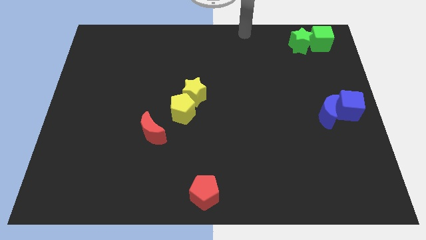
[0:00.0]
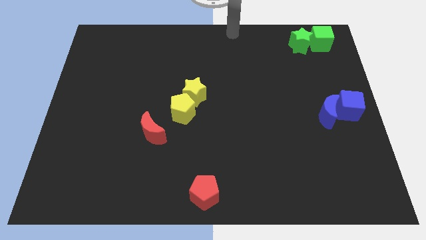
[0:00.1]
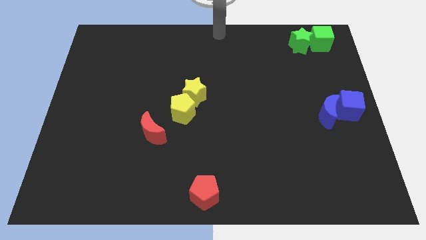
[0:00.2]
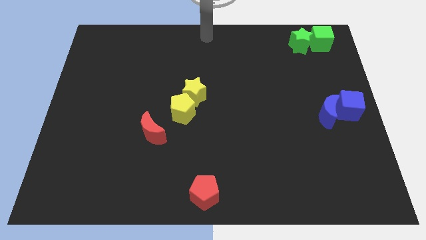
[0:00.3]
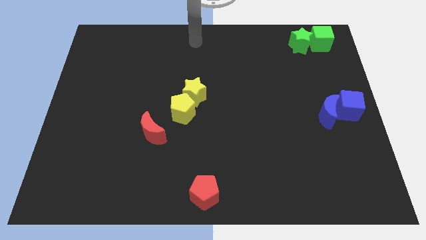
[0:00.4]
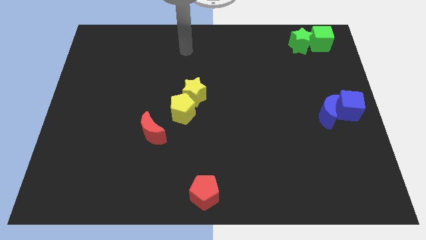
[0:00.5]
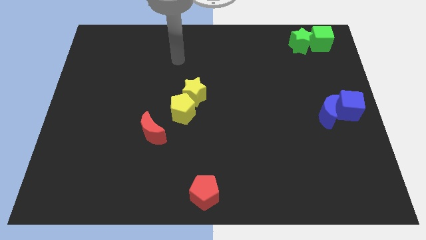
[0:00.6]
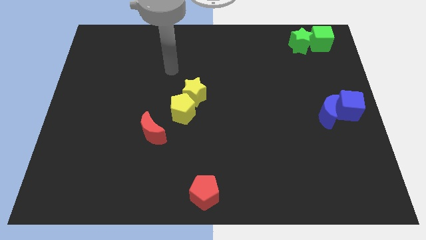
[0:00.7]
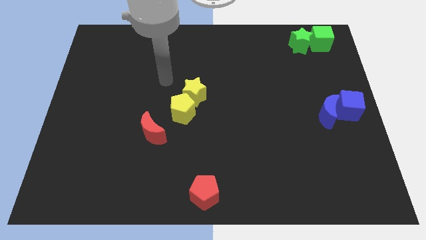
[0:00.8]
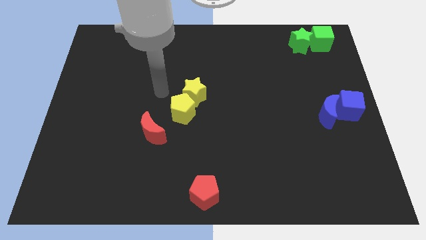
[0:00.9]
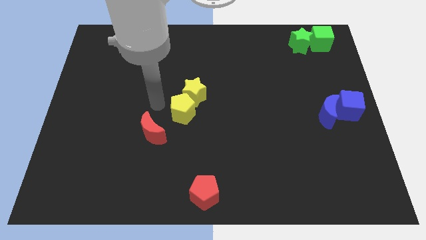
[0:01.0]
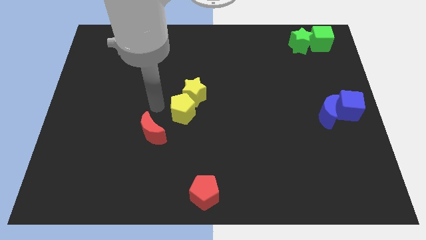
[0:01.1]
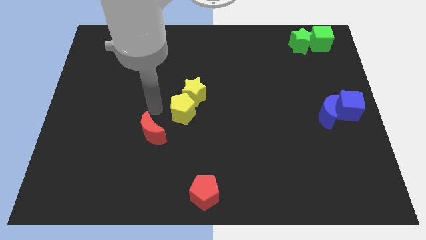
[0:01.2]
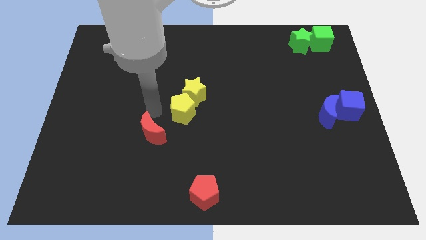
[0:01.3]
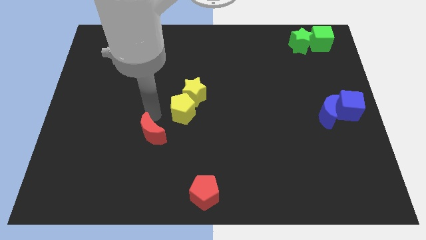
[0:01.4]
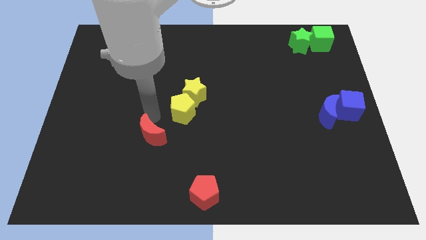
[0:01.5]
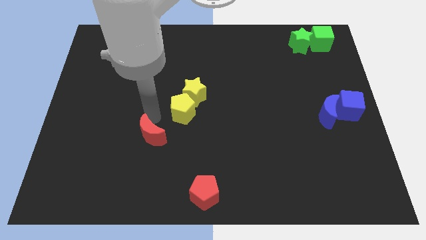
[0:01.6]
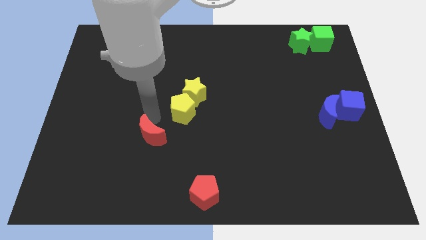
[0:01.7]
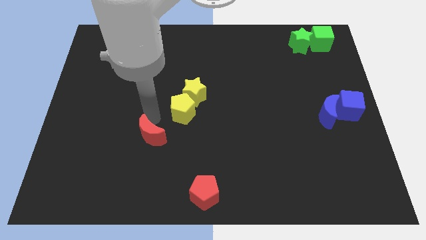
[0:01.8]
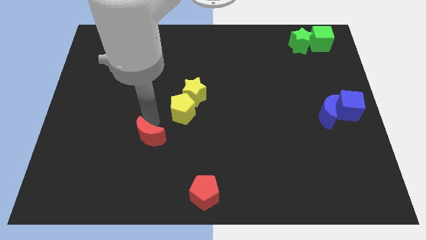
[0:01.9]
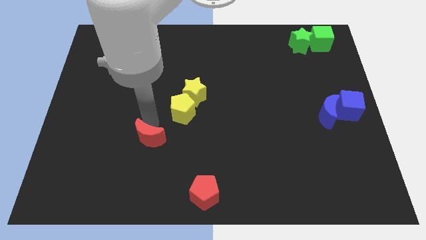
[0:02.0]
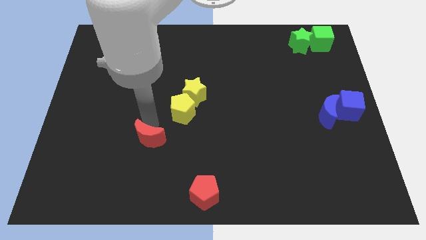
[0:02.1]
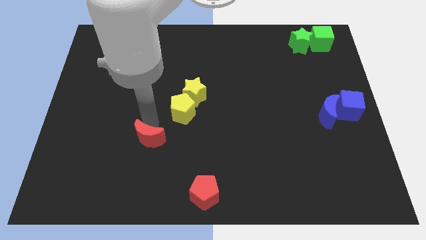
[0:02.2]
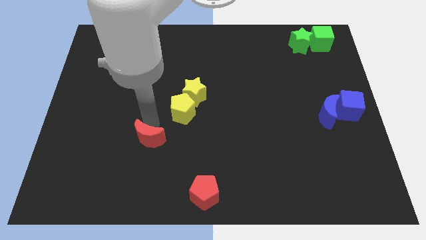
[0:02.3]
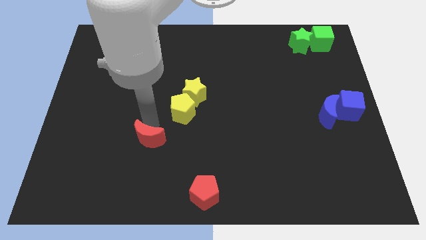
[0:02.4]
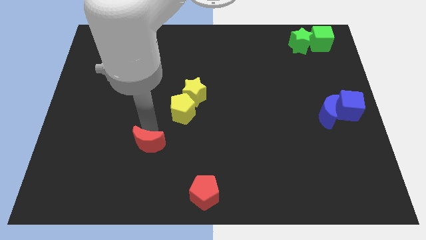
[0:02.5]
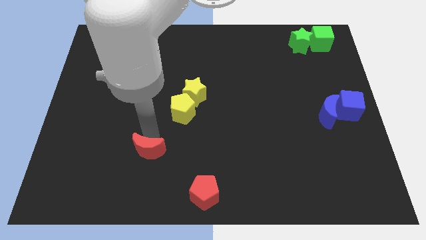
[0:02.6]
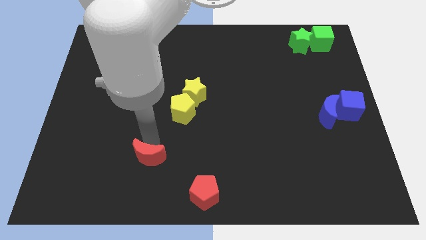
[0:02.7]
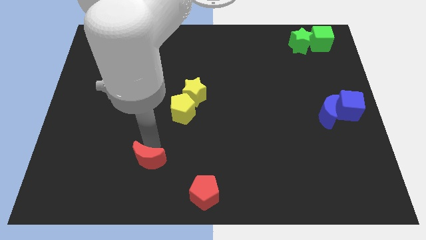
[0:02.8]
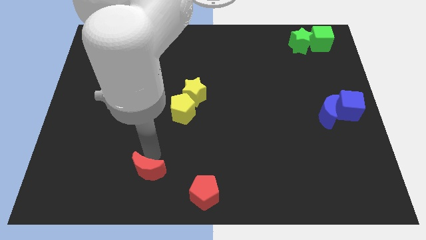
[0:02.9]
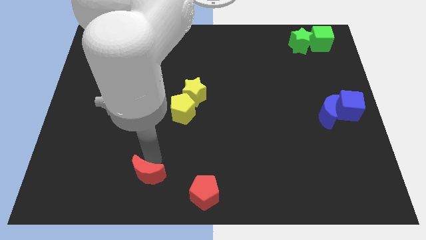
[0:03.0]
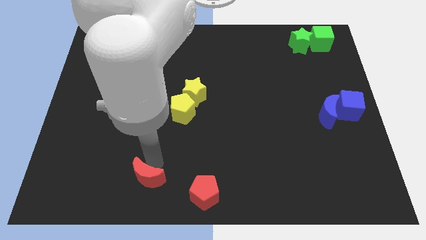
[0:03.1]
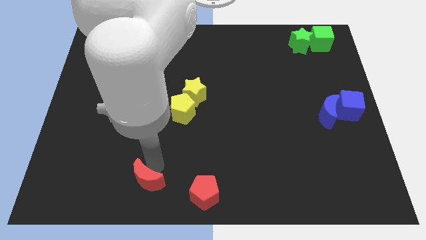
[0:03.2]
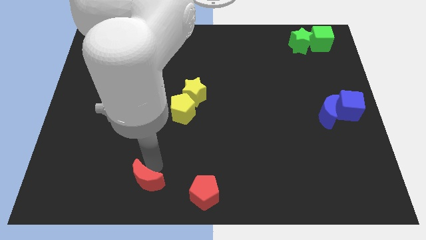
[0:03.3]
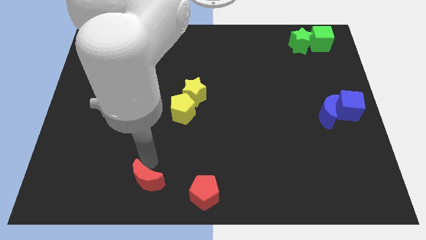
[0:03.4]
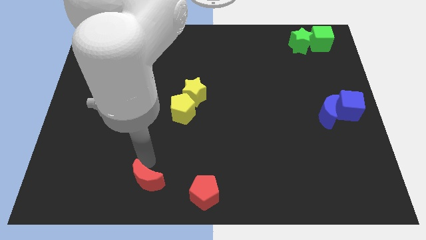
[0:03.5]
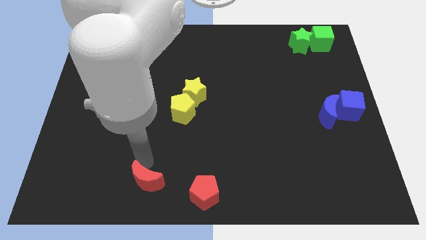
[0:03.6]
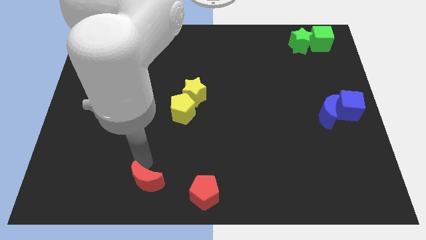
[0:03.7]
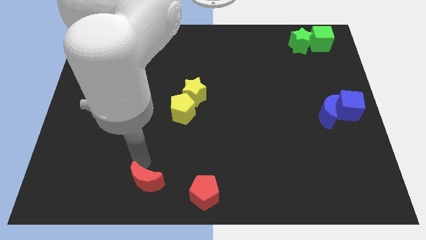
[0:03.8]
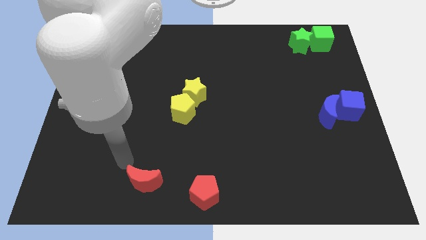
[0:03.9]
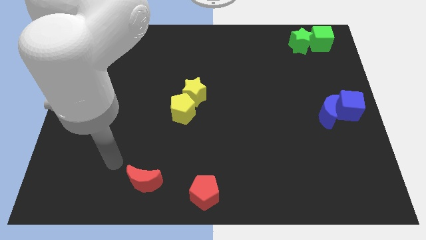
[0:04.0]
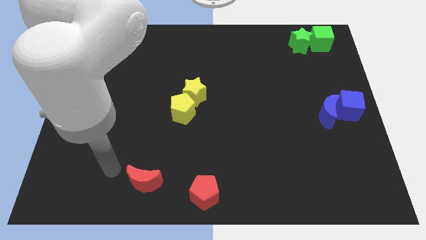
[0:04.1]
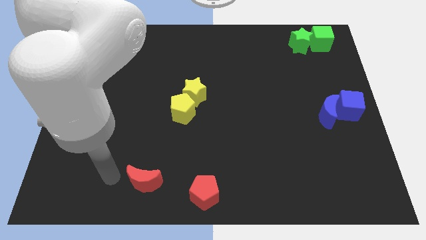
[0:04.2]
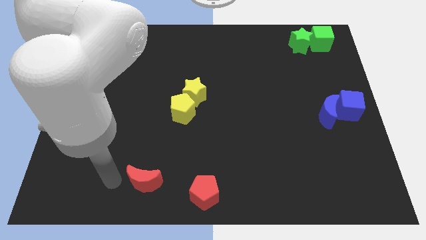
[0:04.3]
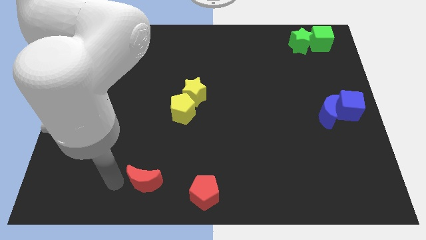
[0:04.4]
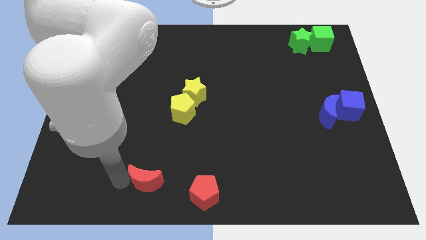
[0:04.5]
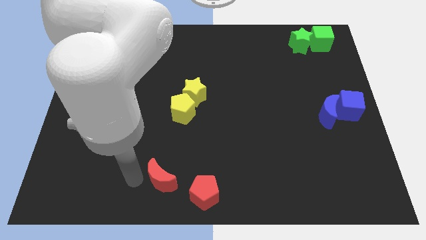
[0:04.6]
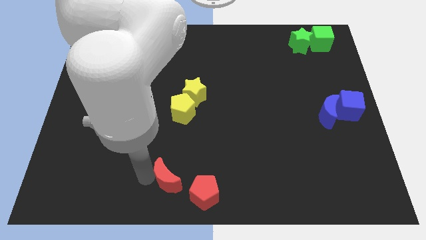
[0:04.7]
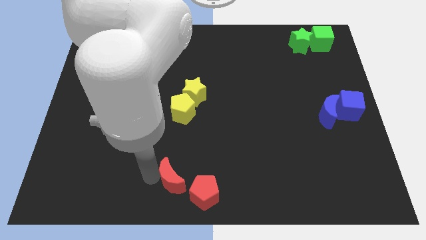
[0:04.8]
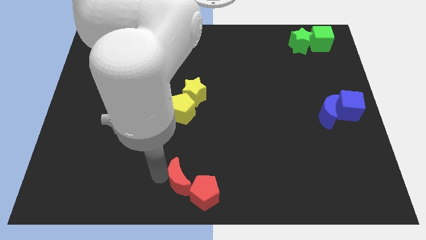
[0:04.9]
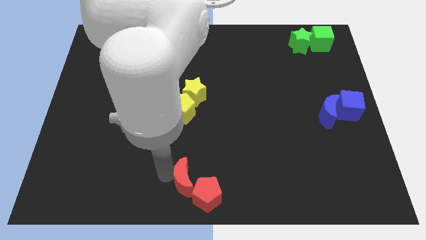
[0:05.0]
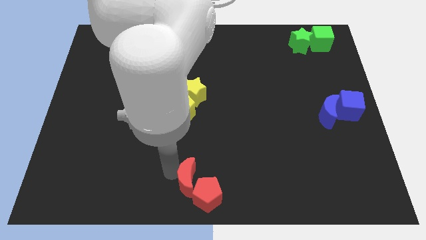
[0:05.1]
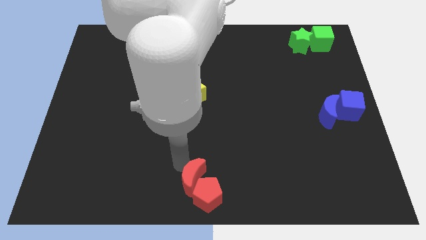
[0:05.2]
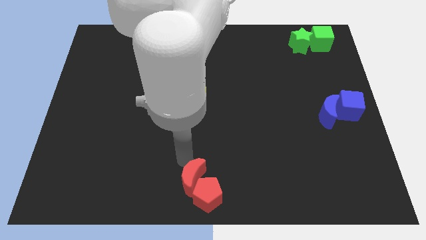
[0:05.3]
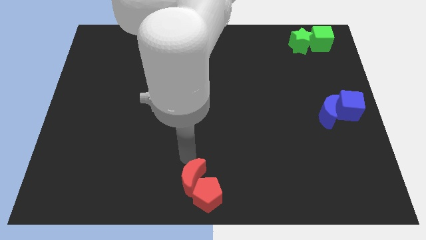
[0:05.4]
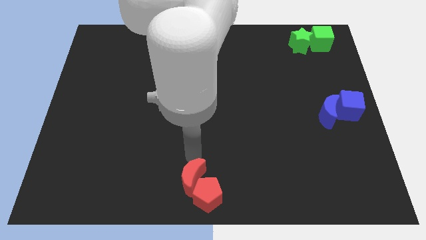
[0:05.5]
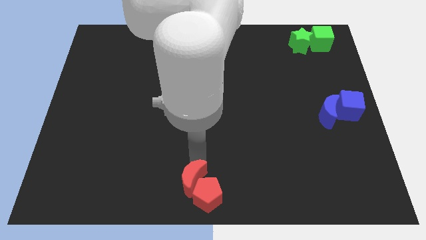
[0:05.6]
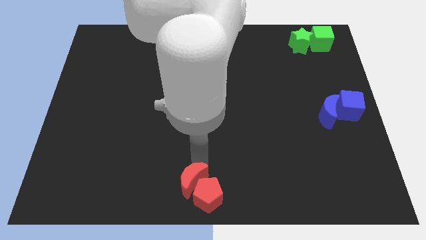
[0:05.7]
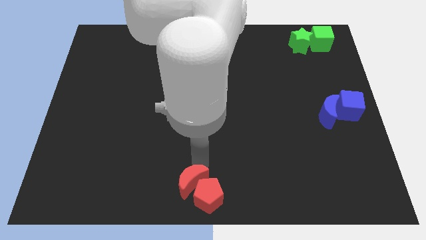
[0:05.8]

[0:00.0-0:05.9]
move the red crescent to the left of the red pentagon

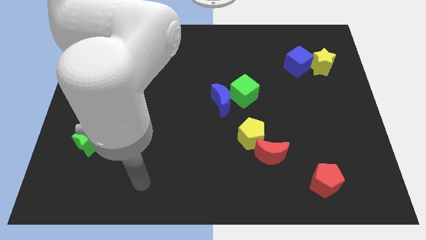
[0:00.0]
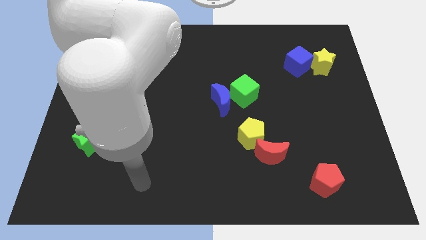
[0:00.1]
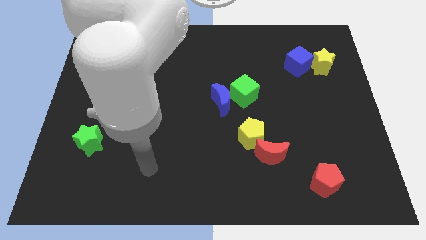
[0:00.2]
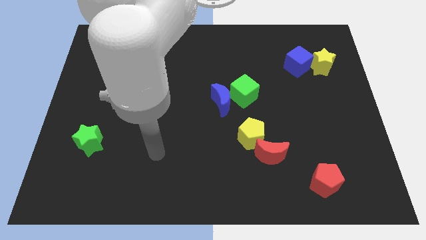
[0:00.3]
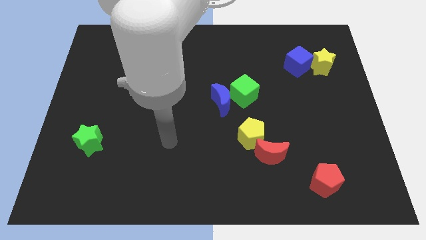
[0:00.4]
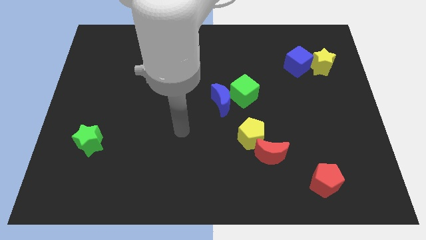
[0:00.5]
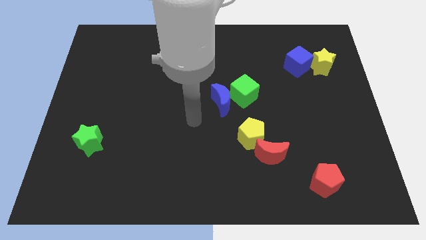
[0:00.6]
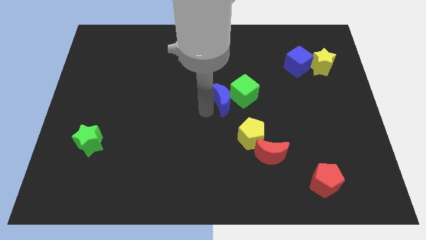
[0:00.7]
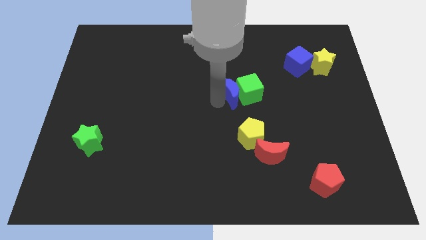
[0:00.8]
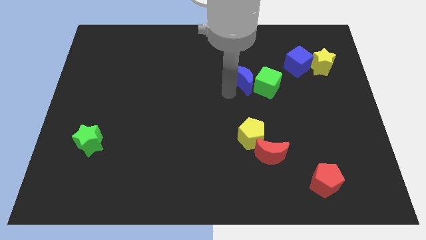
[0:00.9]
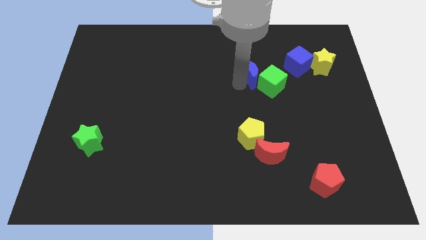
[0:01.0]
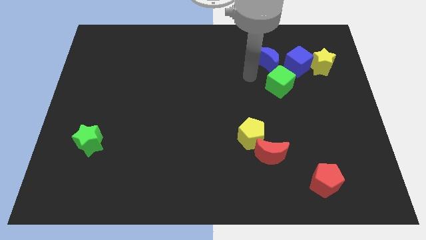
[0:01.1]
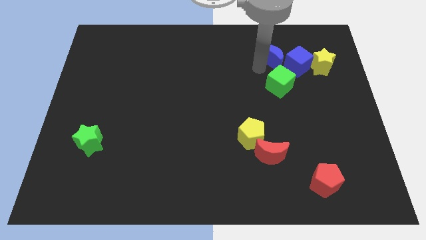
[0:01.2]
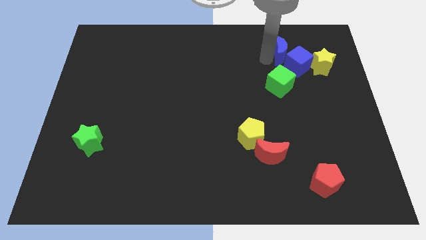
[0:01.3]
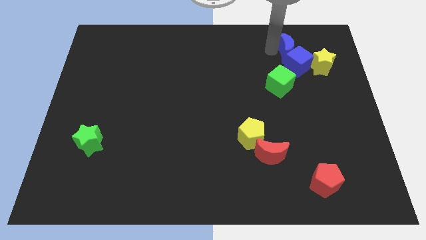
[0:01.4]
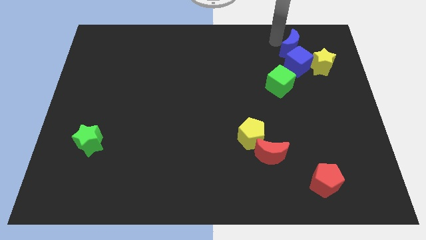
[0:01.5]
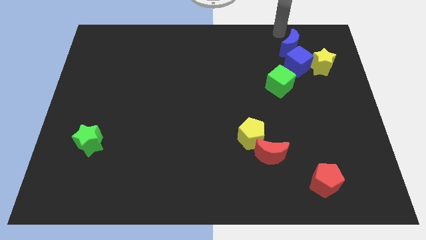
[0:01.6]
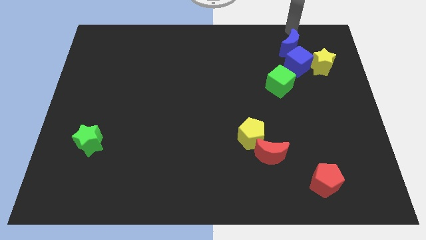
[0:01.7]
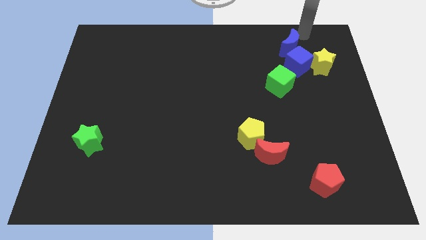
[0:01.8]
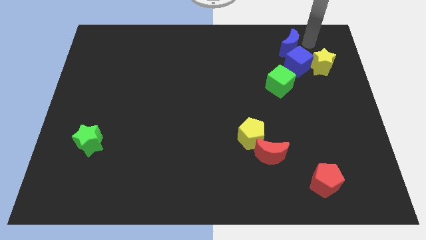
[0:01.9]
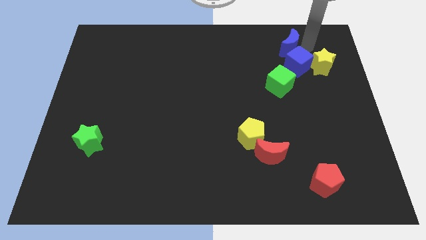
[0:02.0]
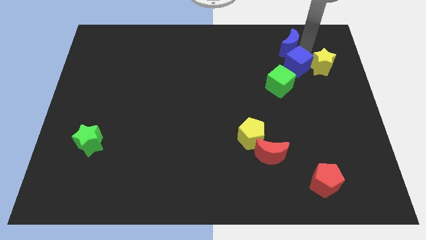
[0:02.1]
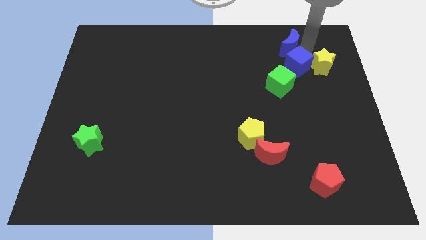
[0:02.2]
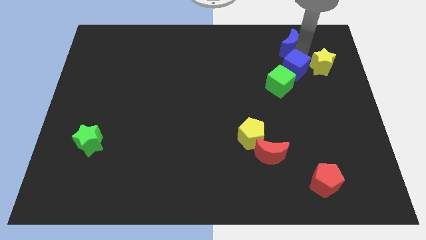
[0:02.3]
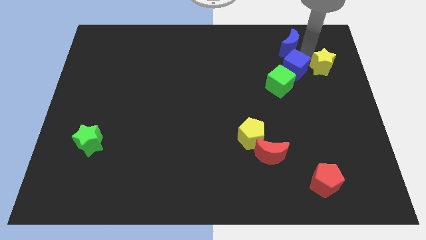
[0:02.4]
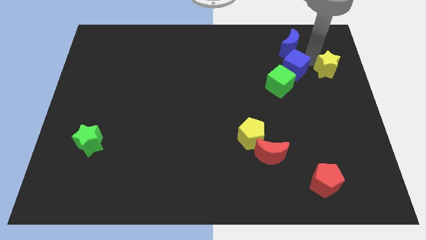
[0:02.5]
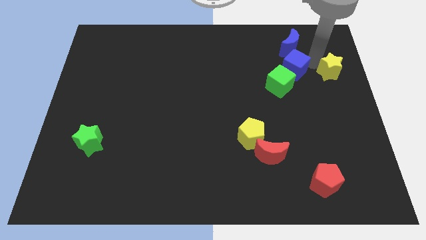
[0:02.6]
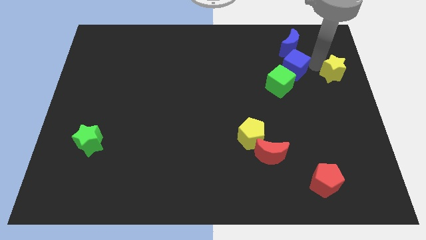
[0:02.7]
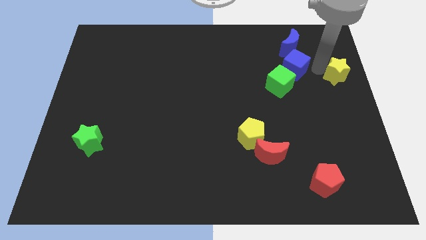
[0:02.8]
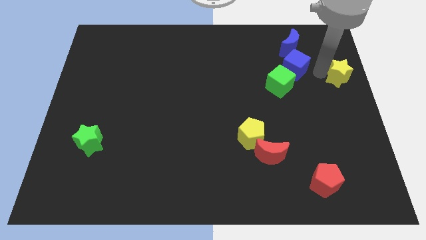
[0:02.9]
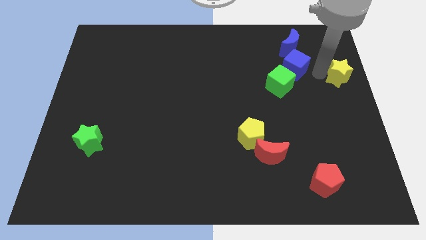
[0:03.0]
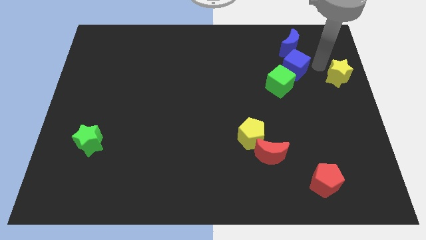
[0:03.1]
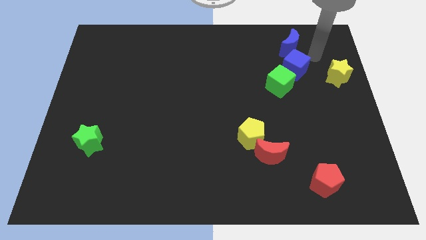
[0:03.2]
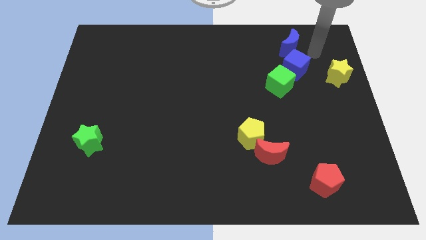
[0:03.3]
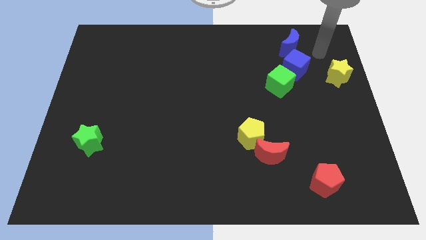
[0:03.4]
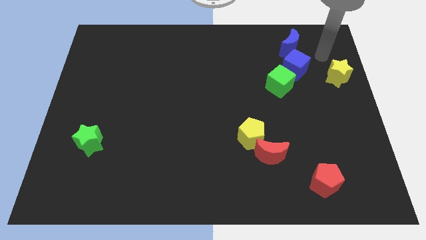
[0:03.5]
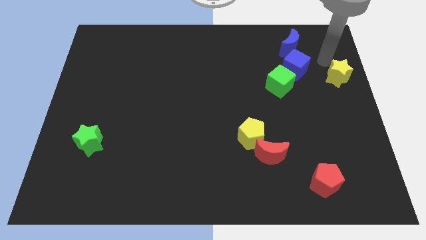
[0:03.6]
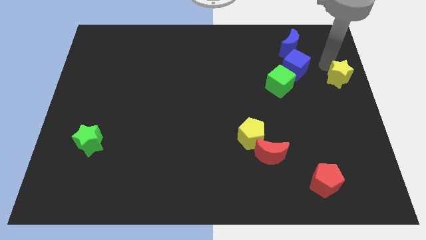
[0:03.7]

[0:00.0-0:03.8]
separate yellow star from blue cube
